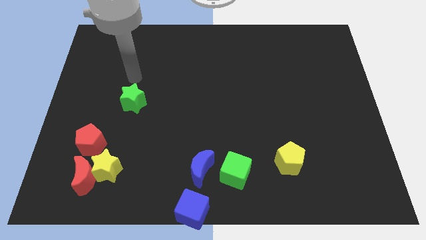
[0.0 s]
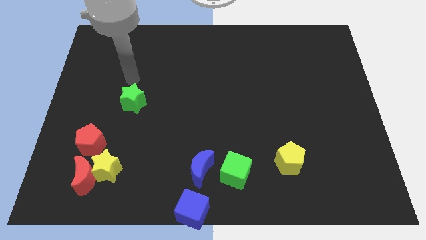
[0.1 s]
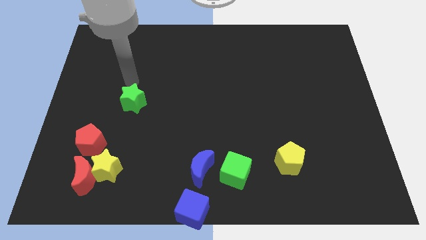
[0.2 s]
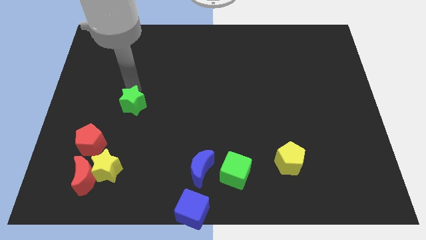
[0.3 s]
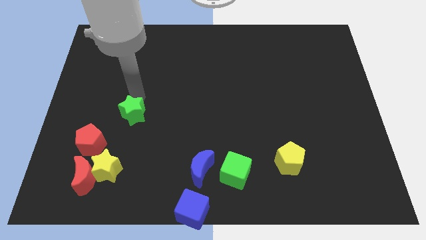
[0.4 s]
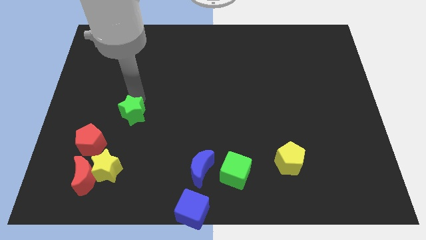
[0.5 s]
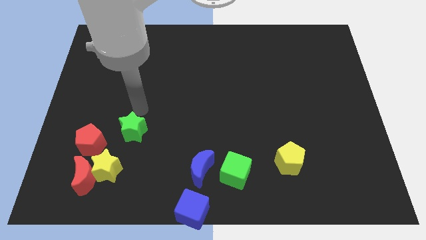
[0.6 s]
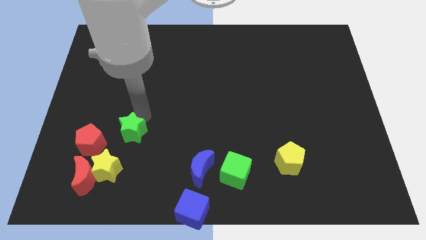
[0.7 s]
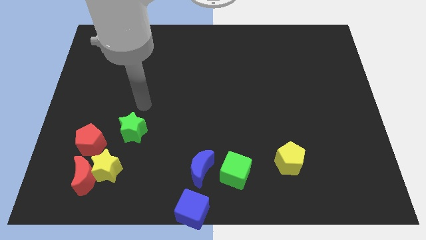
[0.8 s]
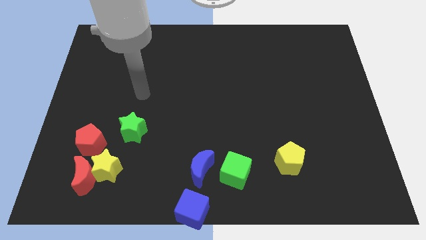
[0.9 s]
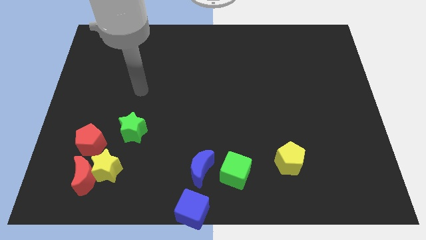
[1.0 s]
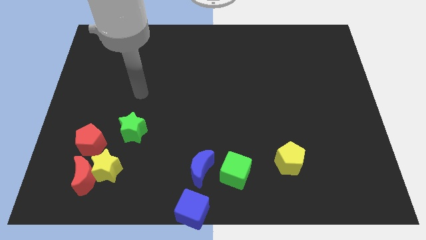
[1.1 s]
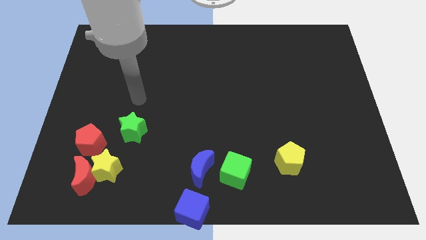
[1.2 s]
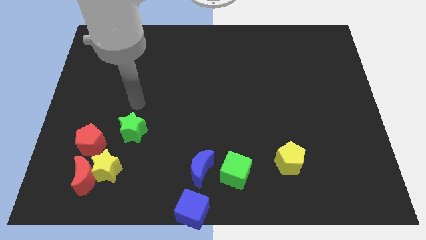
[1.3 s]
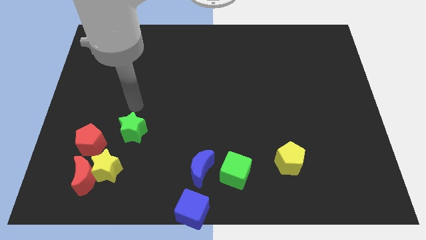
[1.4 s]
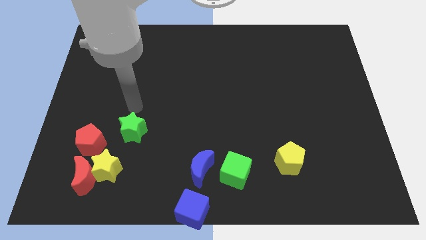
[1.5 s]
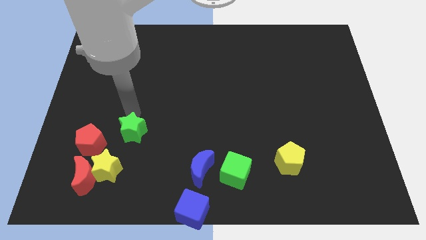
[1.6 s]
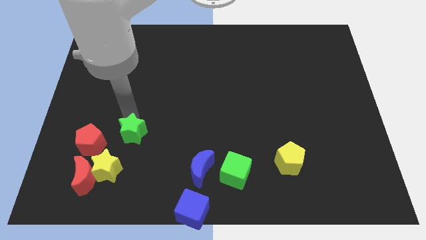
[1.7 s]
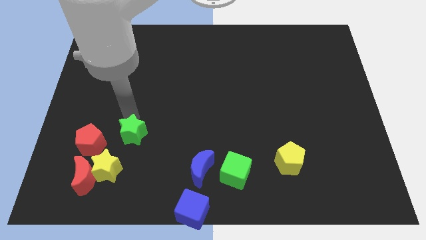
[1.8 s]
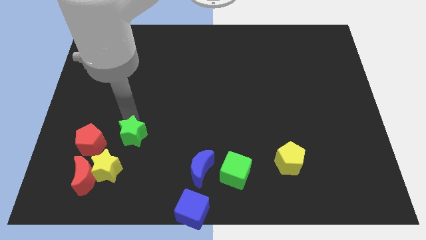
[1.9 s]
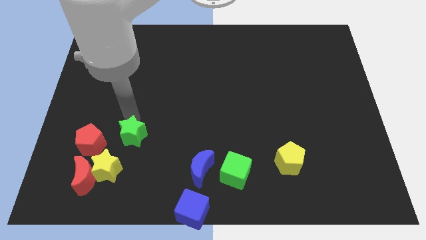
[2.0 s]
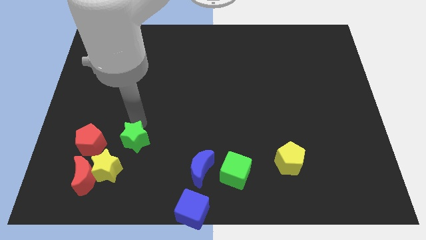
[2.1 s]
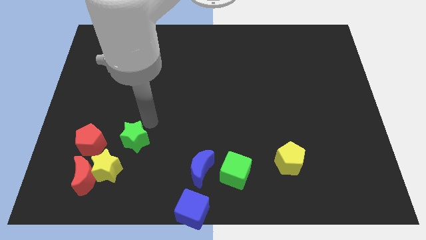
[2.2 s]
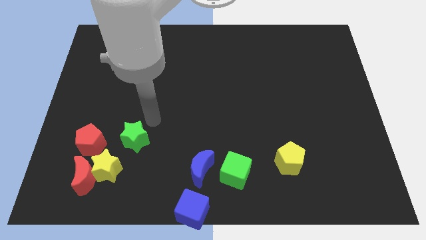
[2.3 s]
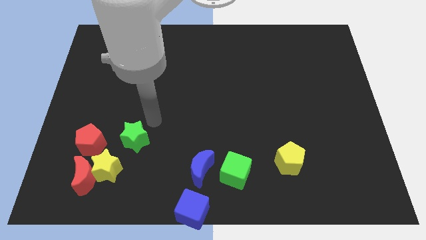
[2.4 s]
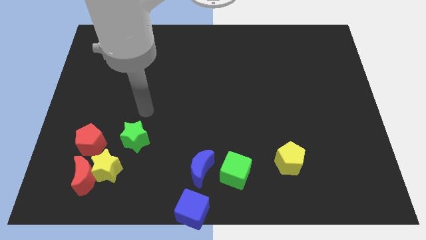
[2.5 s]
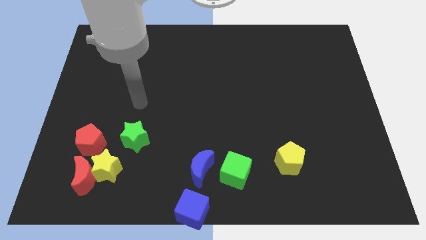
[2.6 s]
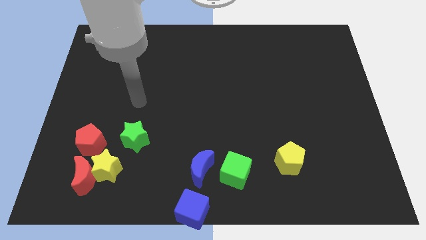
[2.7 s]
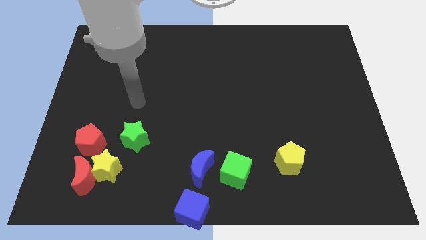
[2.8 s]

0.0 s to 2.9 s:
place the green star to the right of the red pentagon

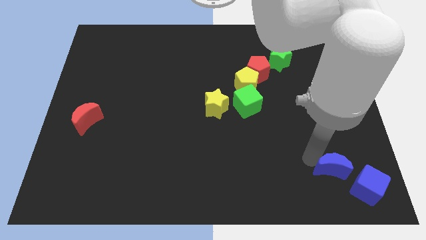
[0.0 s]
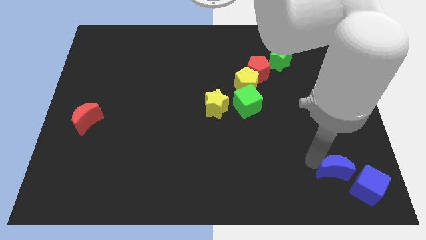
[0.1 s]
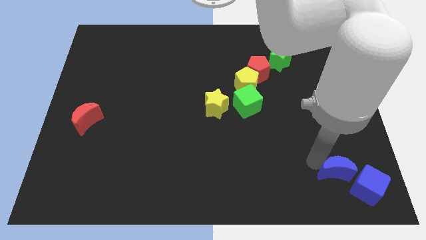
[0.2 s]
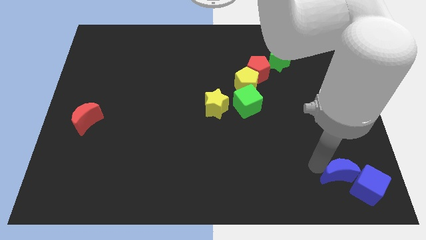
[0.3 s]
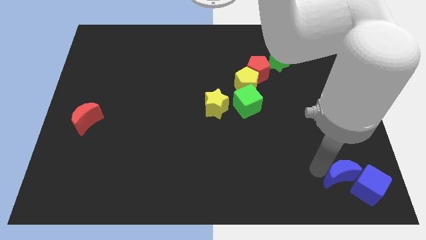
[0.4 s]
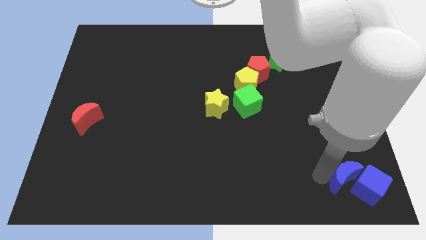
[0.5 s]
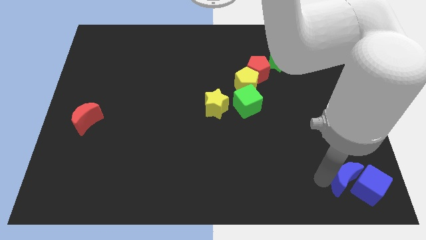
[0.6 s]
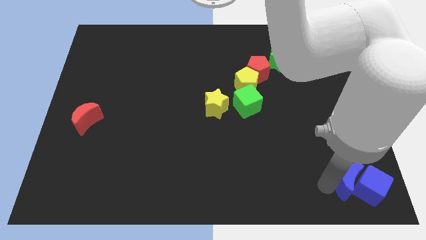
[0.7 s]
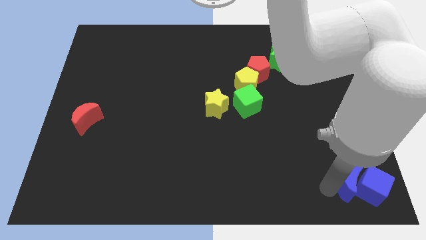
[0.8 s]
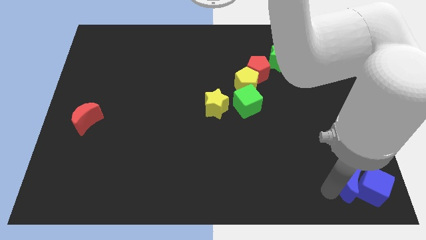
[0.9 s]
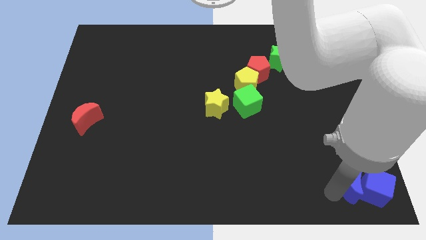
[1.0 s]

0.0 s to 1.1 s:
place blue moon close to blue cube

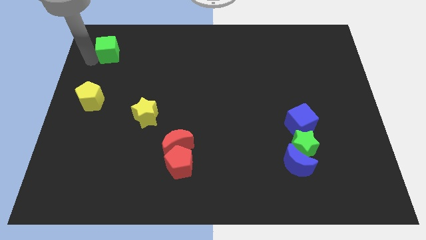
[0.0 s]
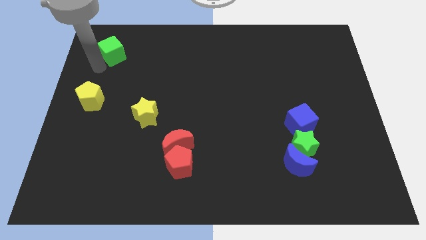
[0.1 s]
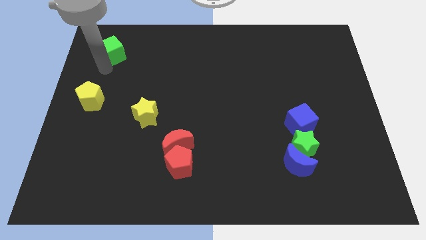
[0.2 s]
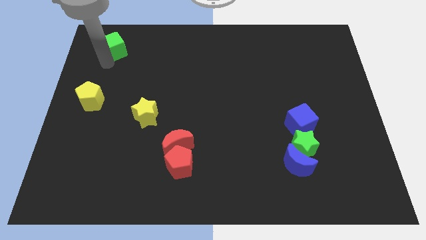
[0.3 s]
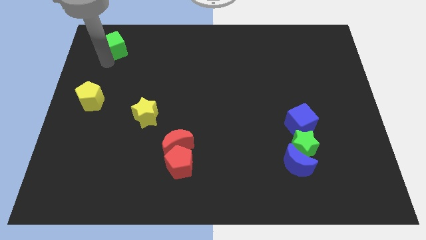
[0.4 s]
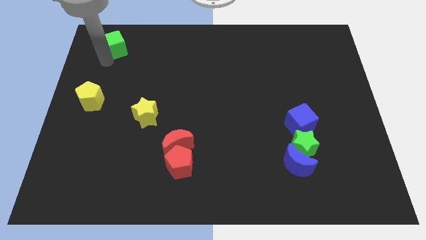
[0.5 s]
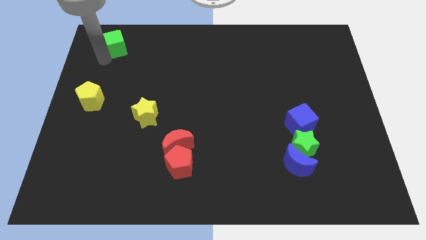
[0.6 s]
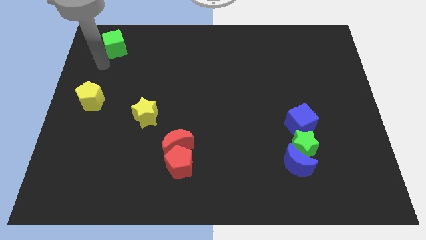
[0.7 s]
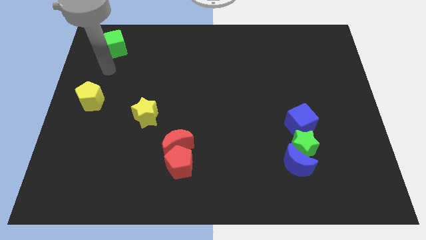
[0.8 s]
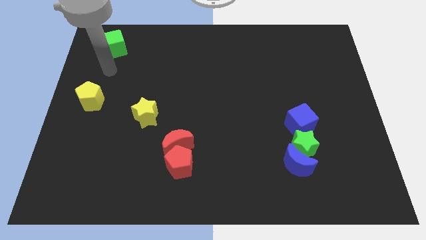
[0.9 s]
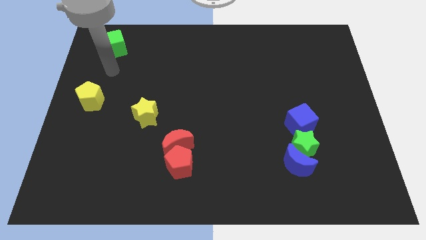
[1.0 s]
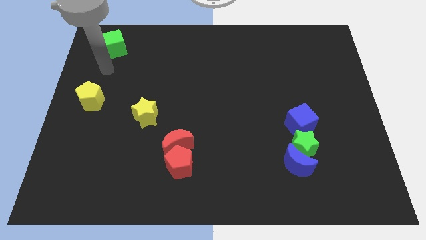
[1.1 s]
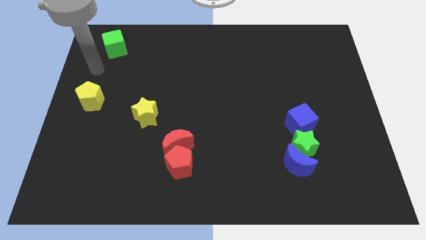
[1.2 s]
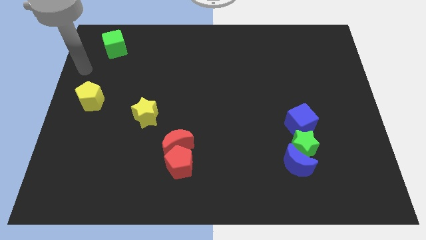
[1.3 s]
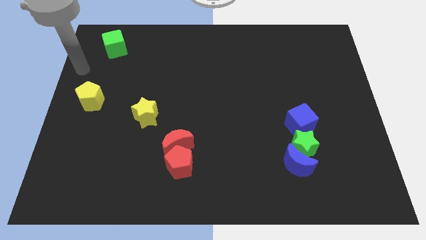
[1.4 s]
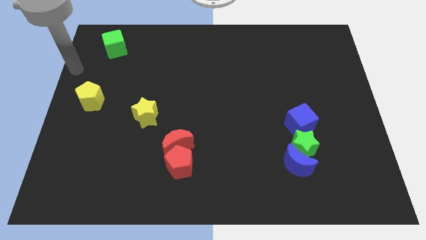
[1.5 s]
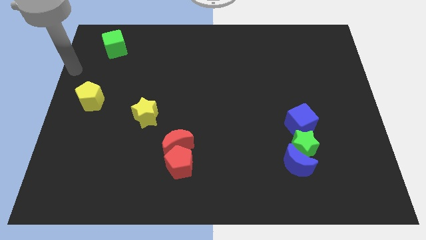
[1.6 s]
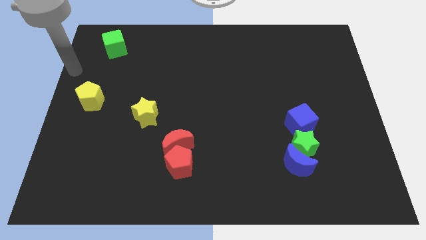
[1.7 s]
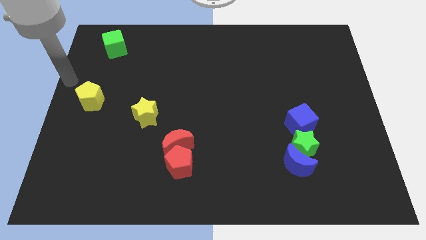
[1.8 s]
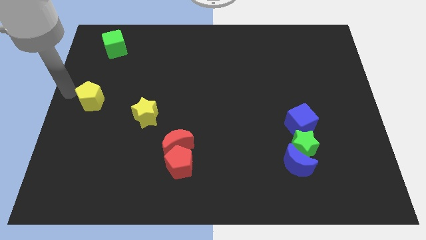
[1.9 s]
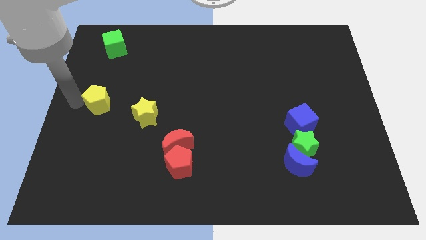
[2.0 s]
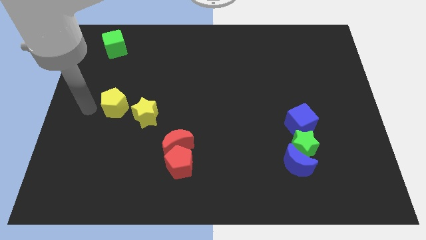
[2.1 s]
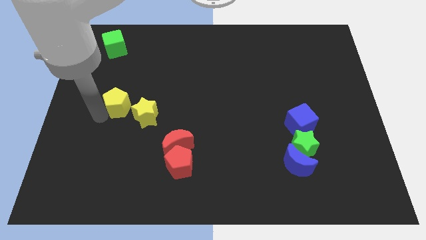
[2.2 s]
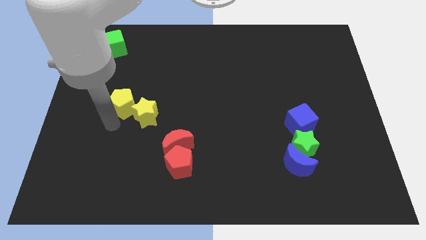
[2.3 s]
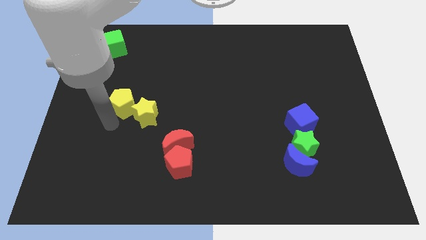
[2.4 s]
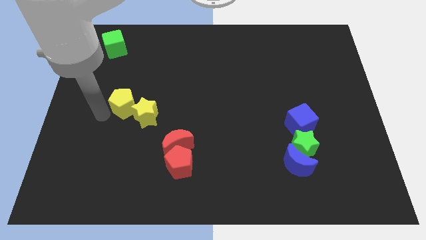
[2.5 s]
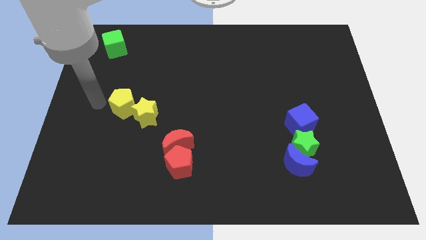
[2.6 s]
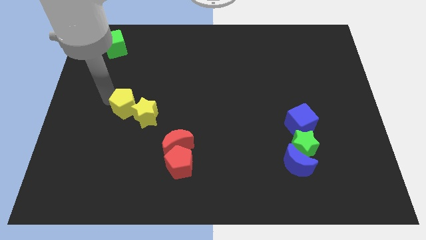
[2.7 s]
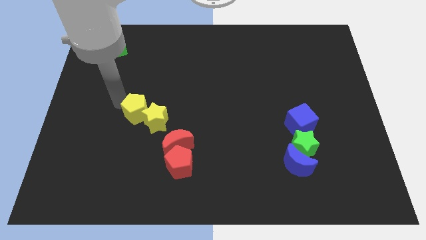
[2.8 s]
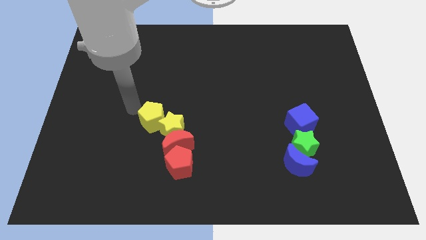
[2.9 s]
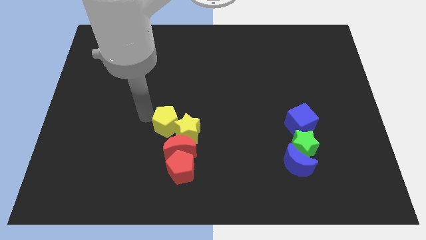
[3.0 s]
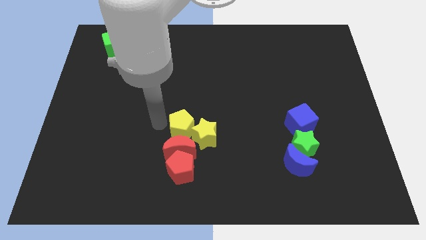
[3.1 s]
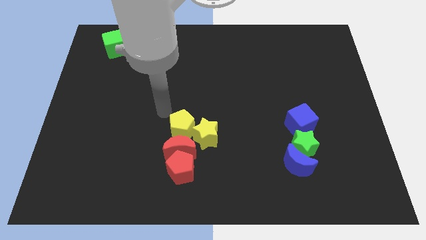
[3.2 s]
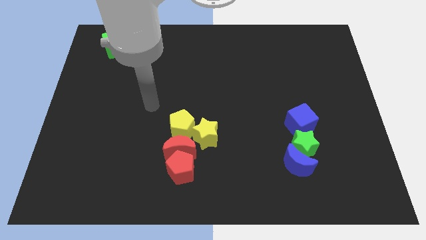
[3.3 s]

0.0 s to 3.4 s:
place the yellow blocks to the top of the red moon

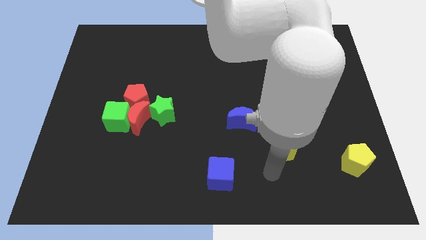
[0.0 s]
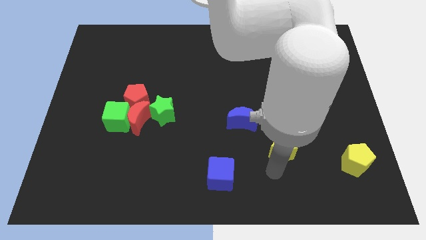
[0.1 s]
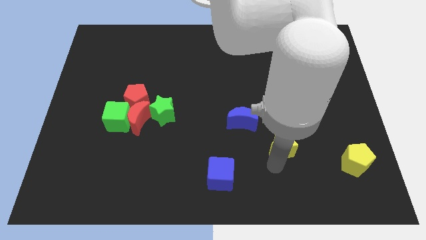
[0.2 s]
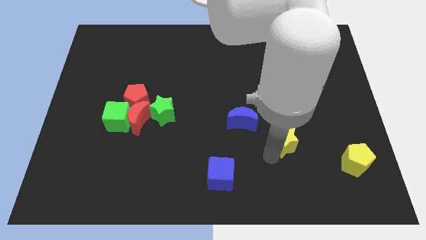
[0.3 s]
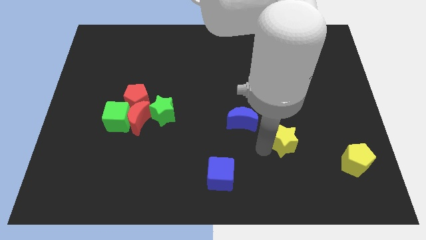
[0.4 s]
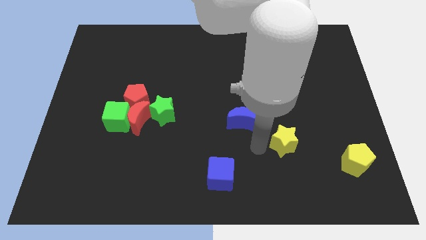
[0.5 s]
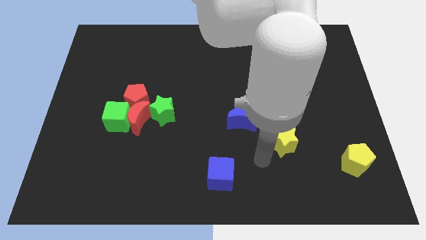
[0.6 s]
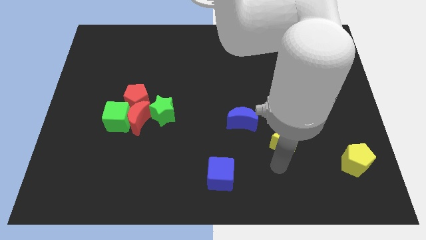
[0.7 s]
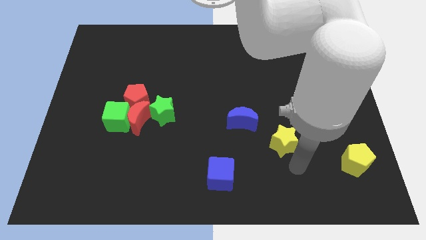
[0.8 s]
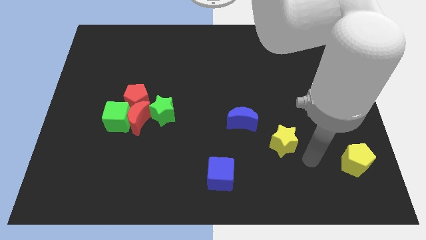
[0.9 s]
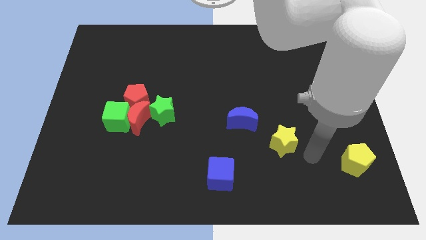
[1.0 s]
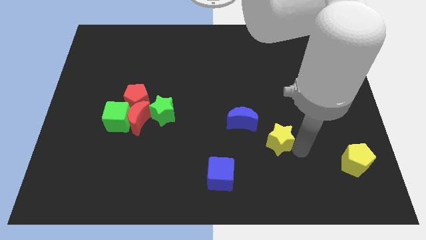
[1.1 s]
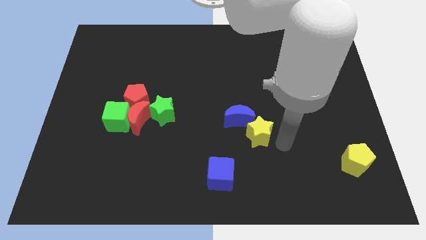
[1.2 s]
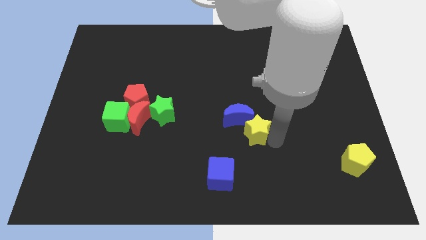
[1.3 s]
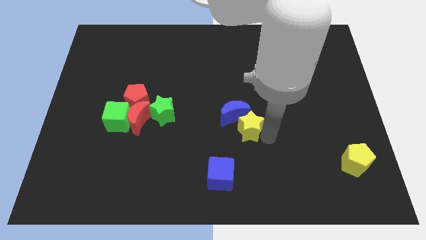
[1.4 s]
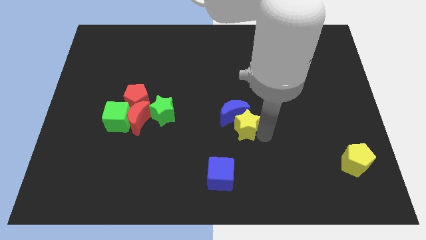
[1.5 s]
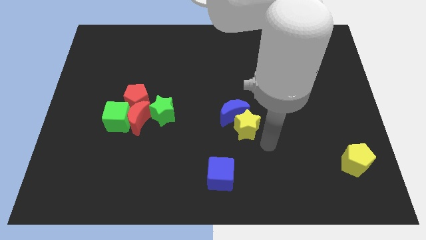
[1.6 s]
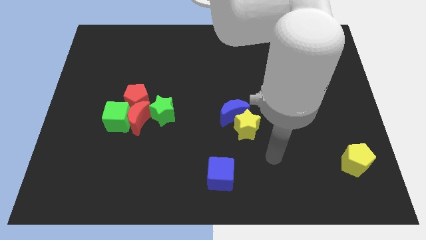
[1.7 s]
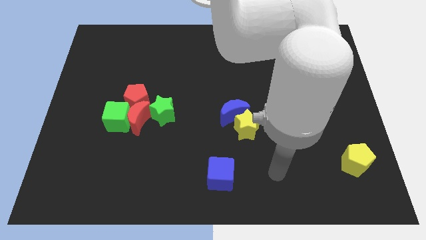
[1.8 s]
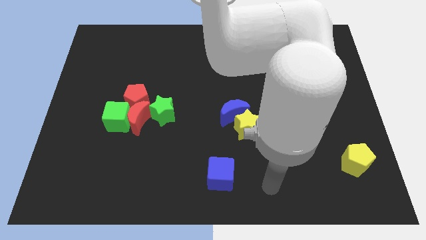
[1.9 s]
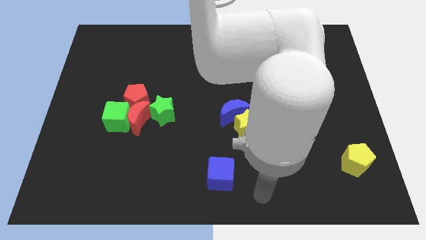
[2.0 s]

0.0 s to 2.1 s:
place yellow star below the blue moon
